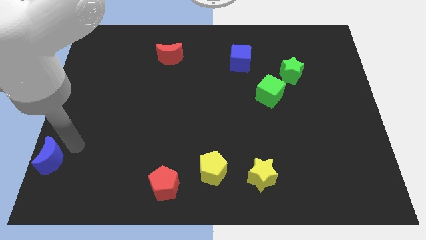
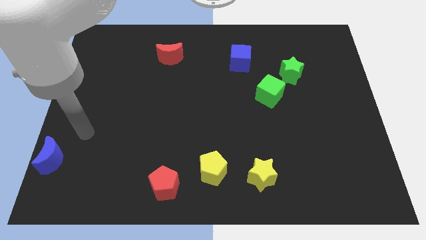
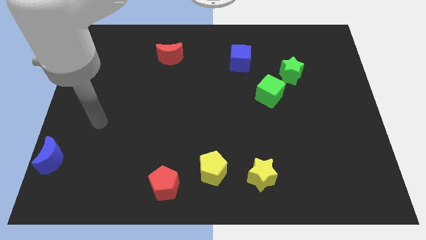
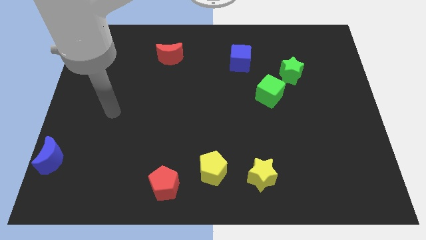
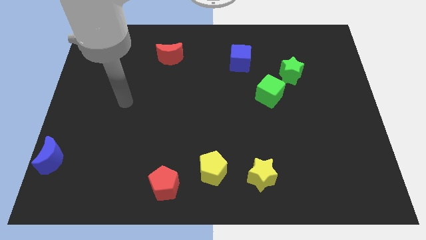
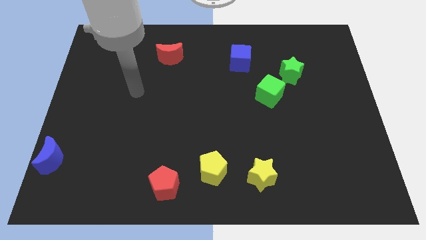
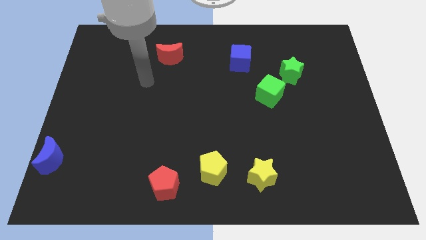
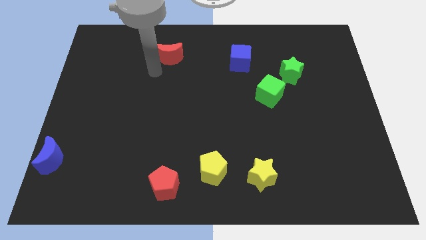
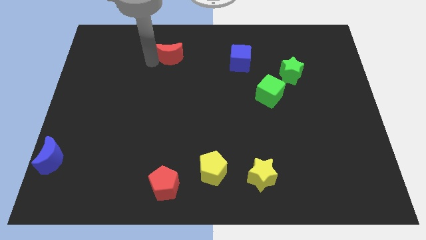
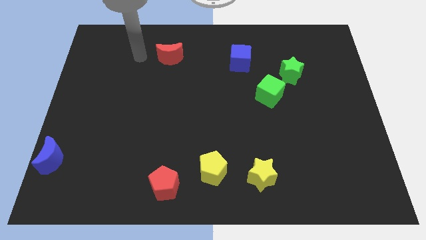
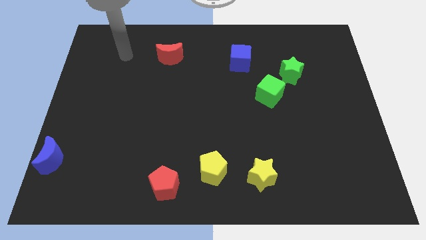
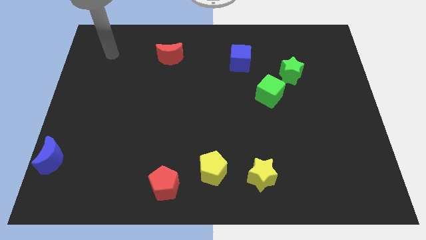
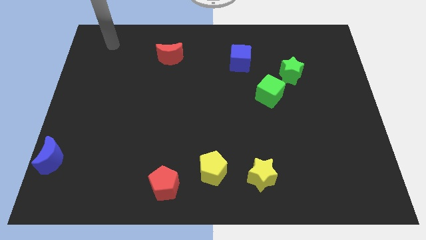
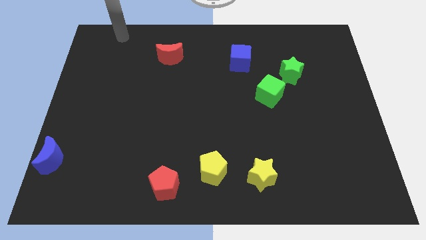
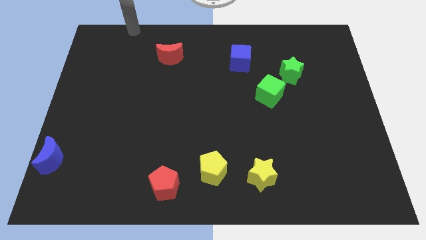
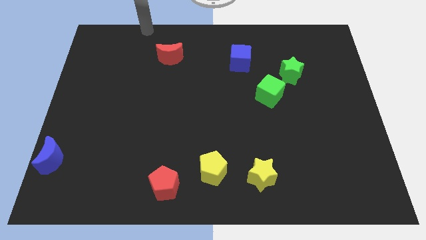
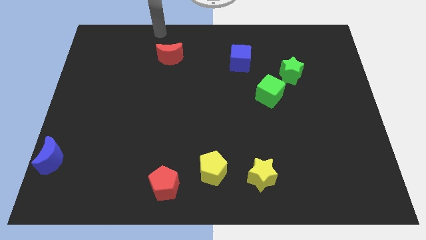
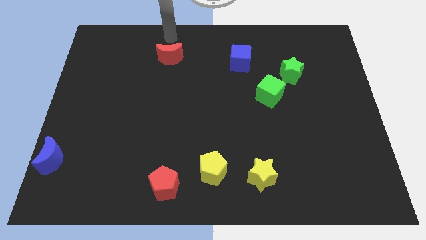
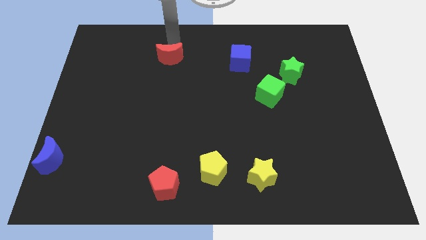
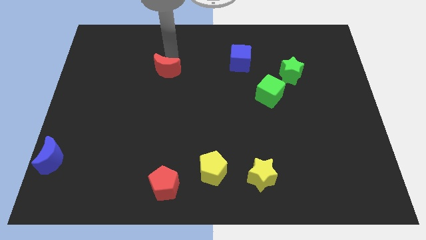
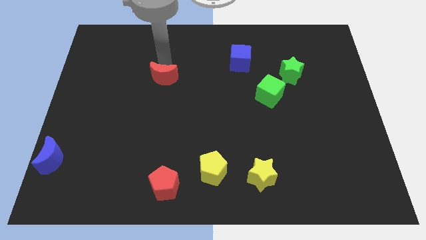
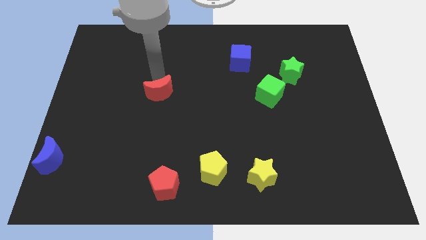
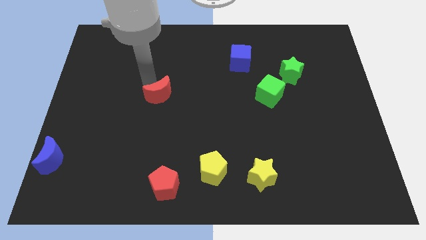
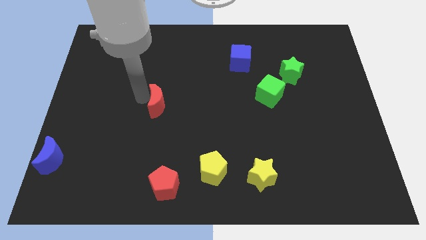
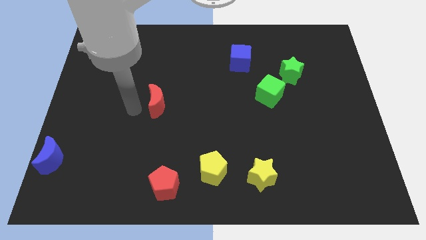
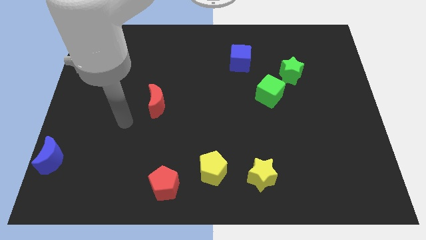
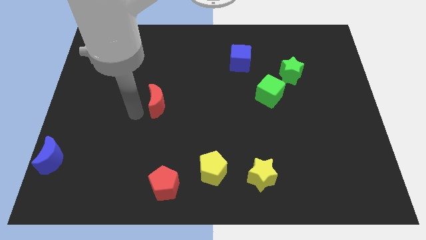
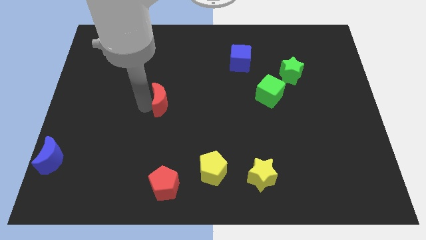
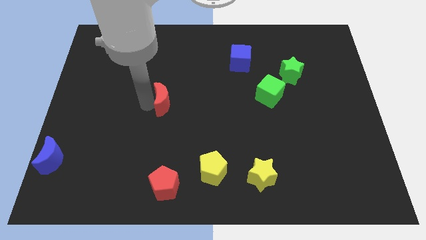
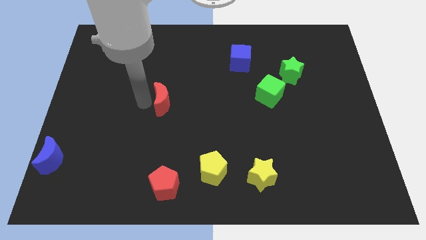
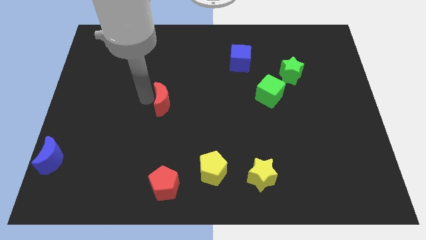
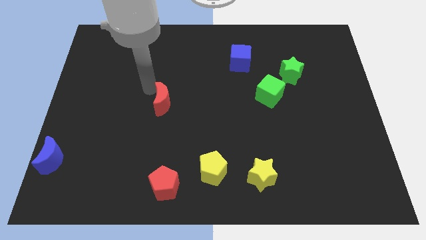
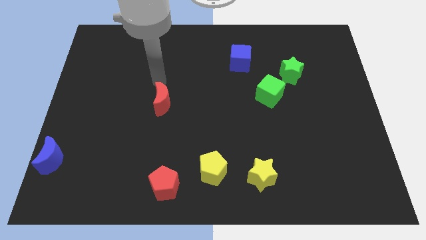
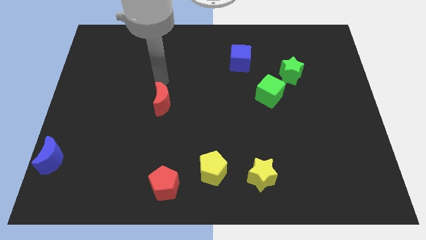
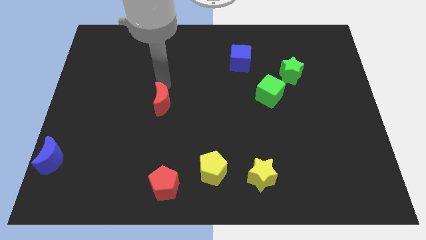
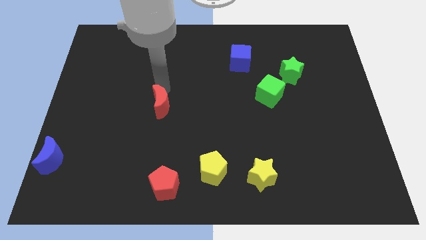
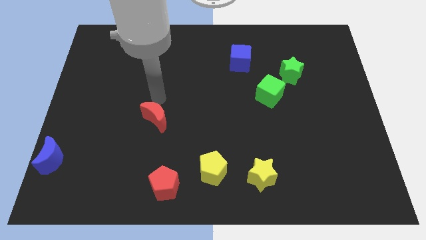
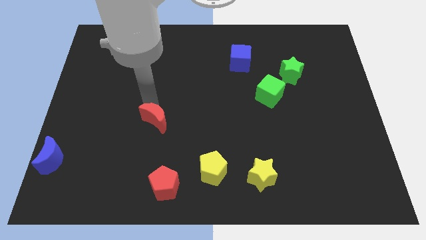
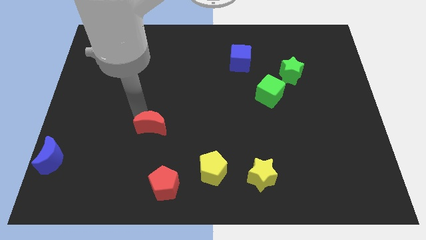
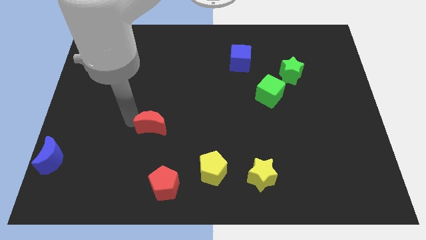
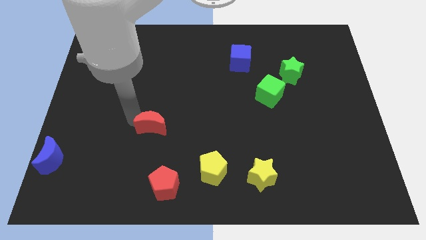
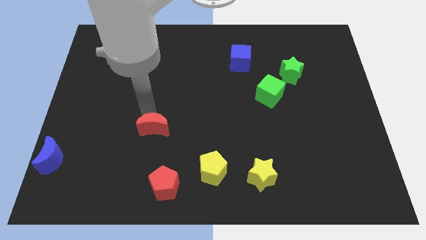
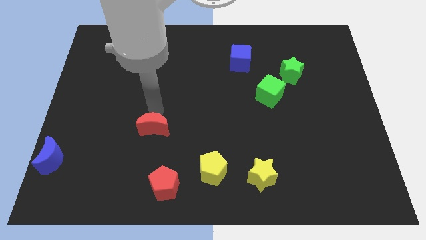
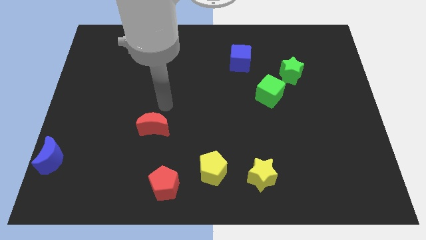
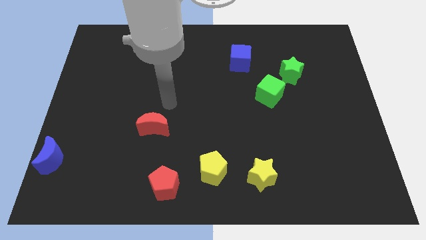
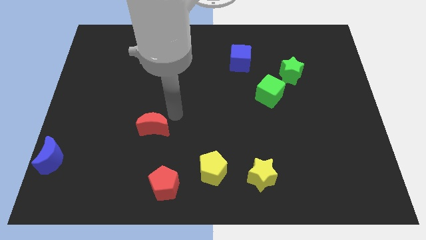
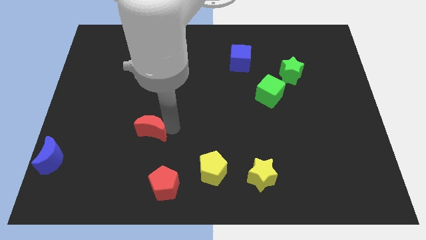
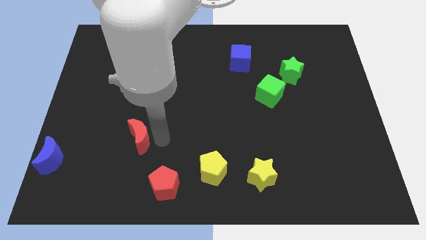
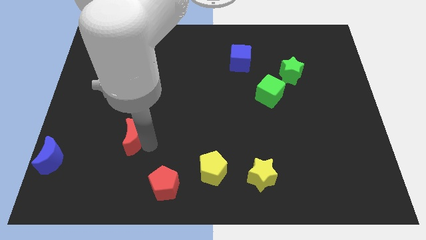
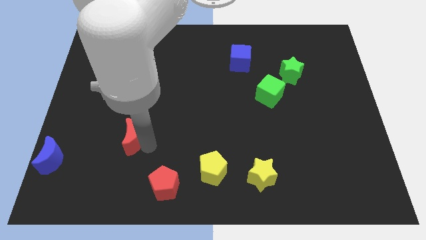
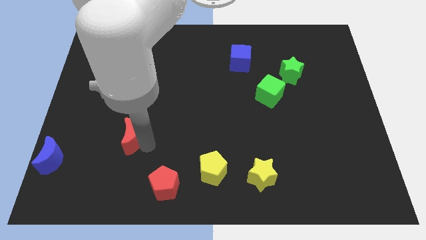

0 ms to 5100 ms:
push the red moon diagonally top left to the red pentagon

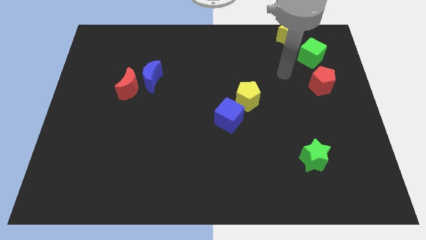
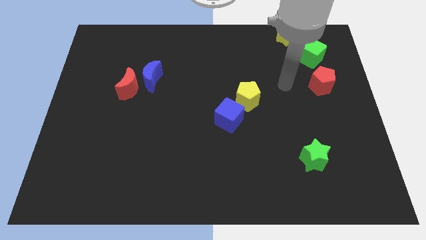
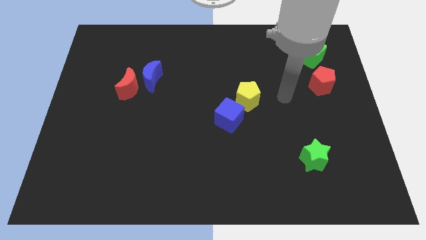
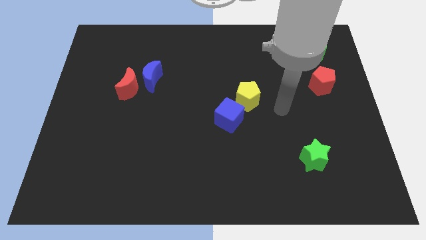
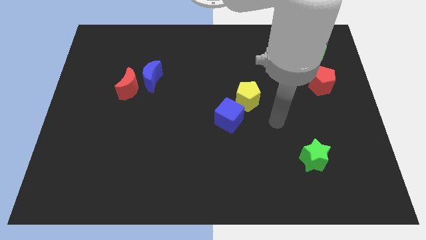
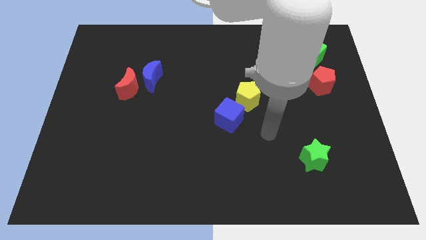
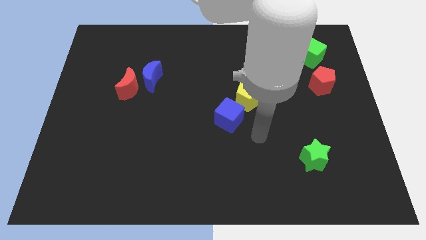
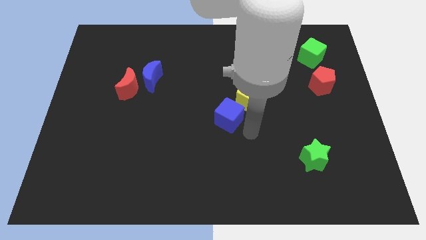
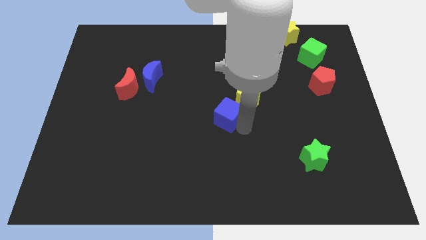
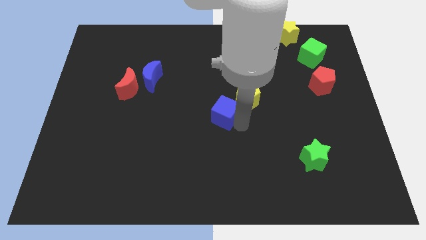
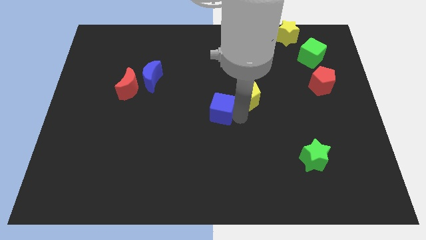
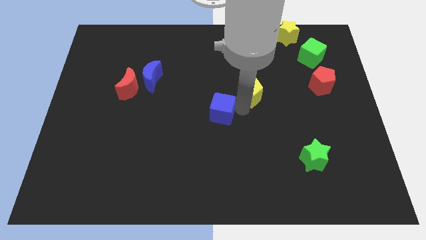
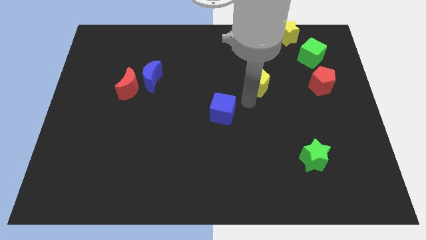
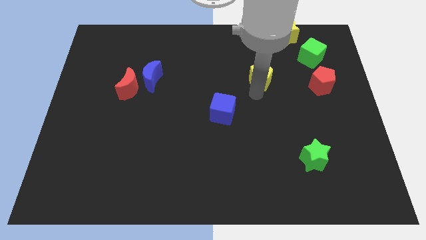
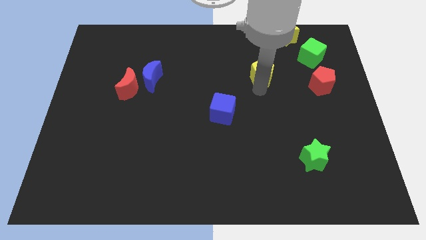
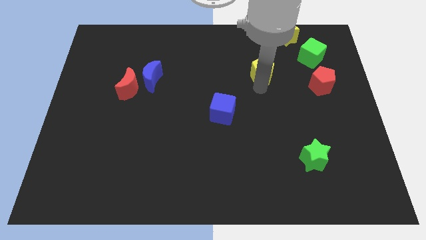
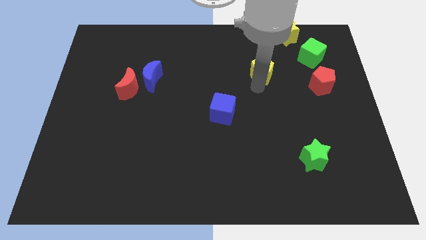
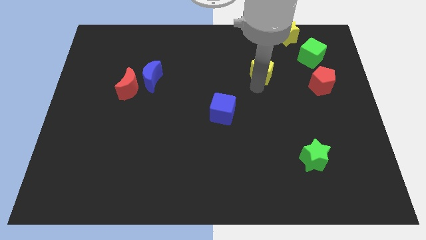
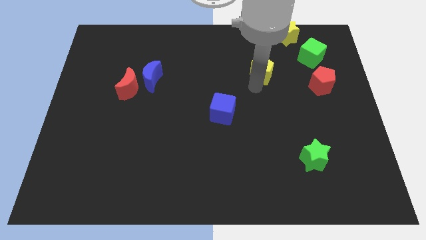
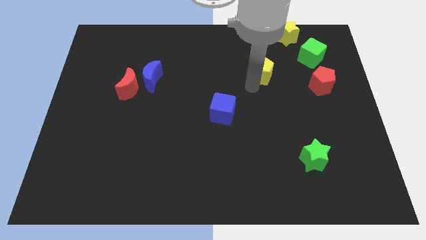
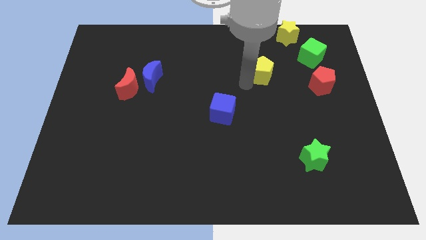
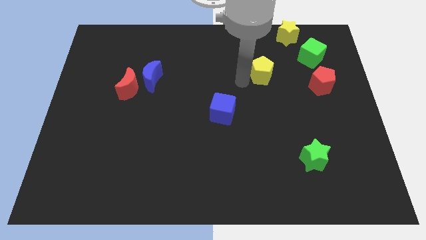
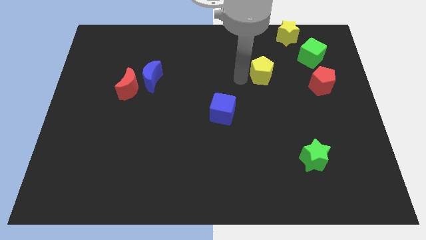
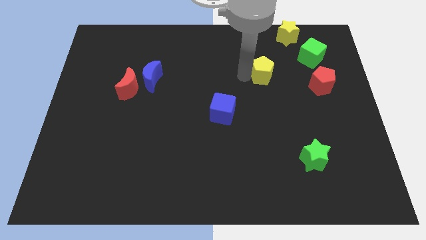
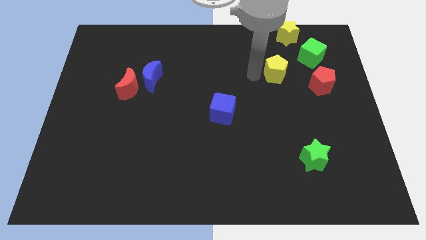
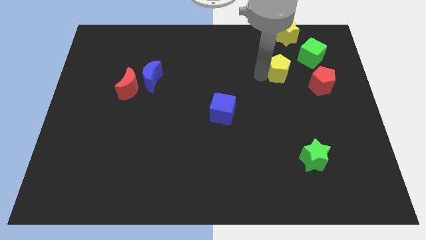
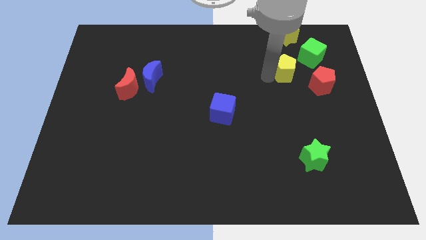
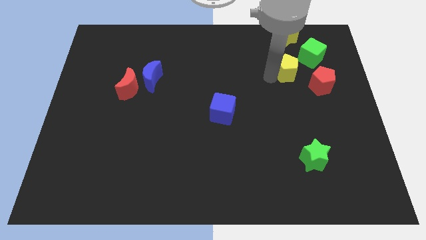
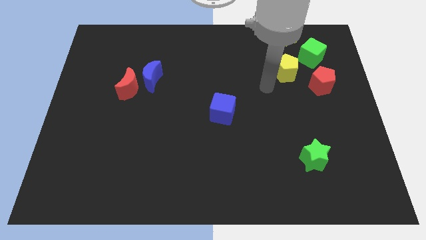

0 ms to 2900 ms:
place the yellow pentagon below the yellow star

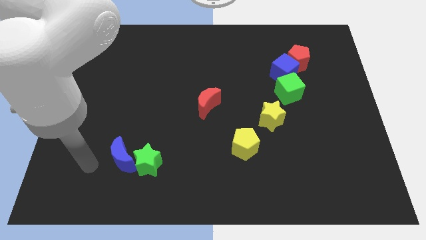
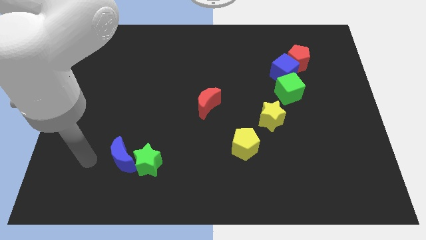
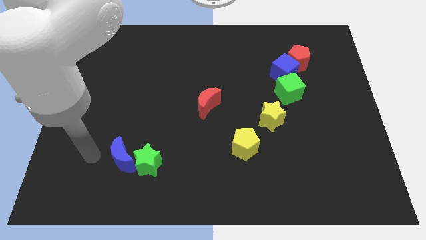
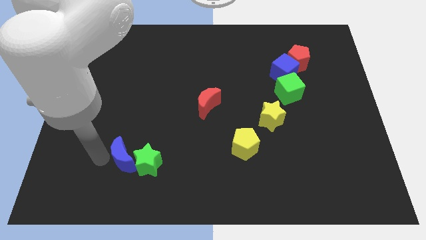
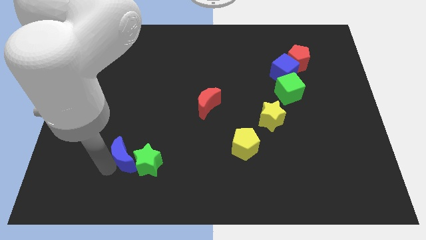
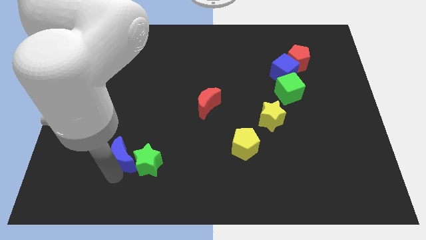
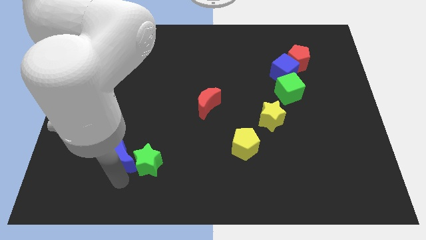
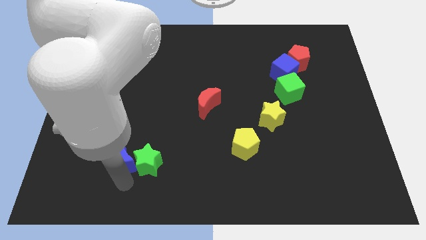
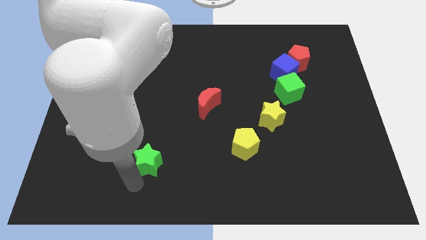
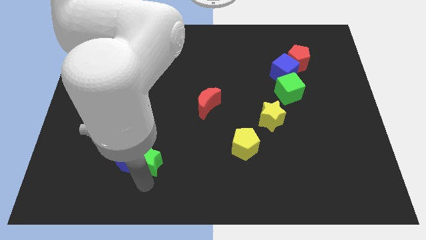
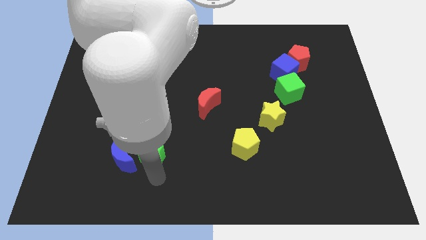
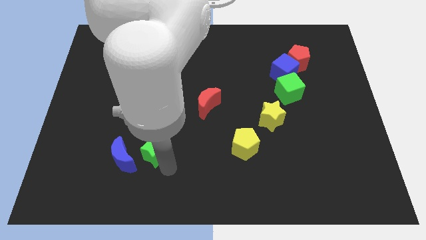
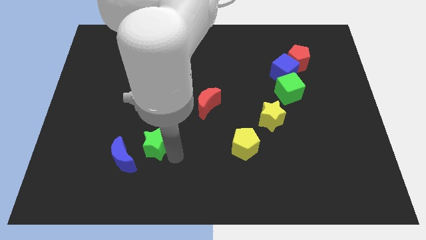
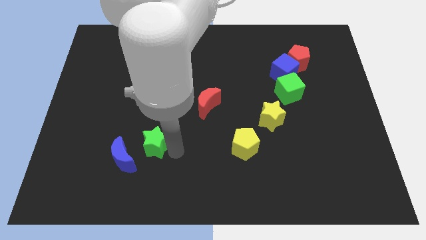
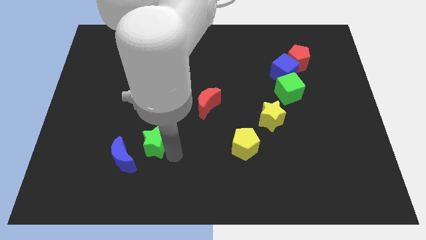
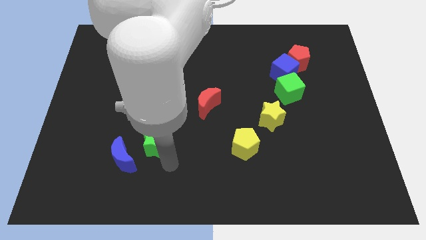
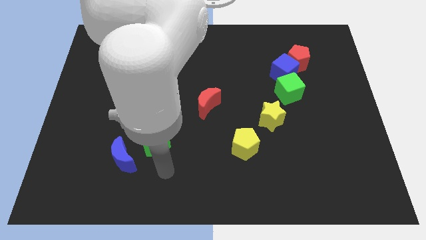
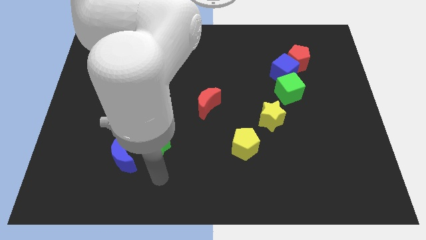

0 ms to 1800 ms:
put the green star to the right of the blue moon
